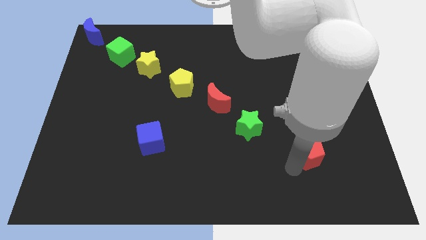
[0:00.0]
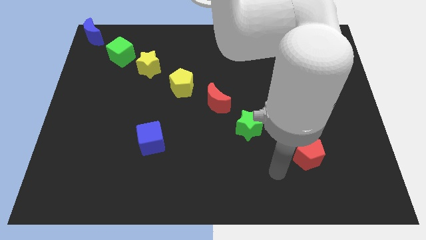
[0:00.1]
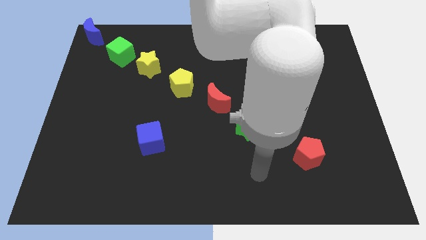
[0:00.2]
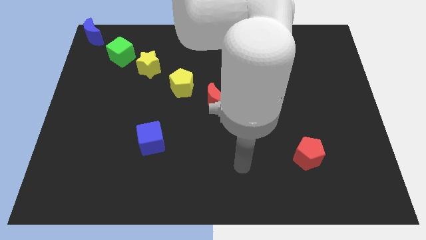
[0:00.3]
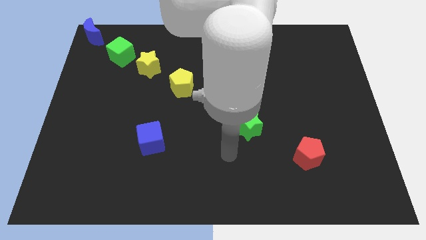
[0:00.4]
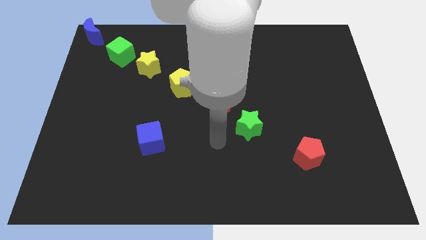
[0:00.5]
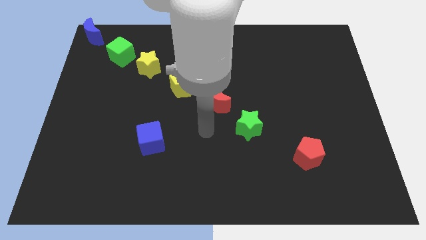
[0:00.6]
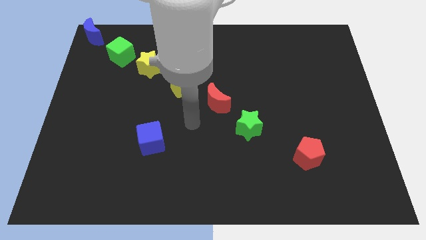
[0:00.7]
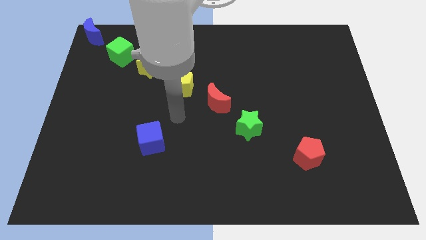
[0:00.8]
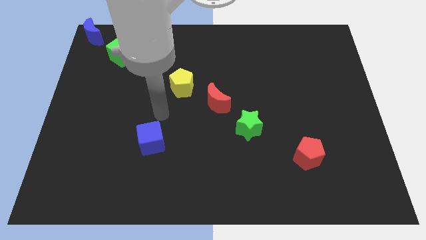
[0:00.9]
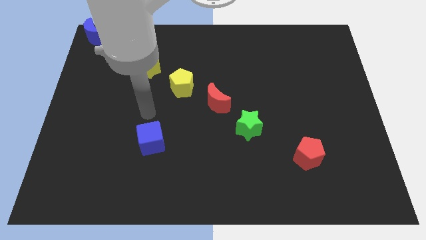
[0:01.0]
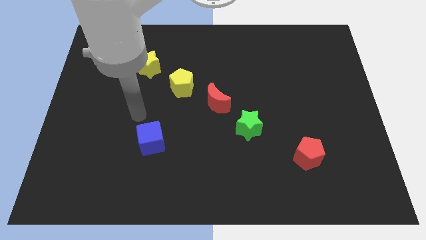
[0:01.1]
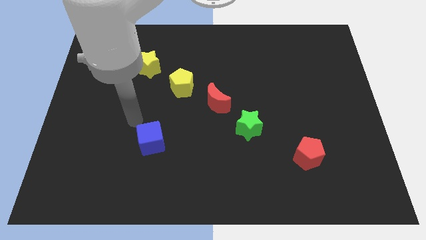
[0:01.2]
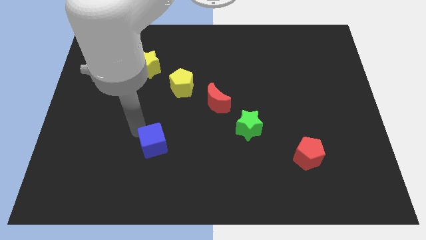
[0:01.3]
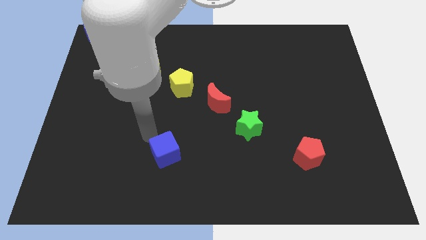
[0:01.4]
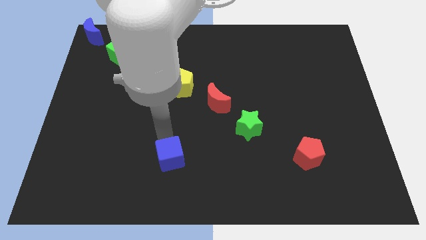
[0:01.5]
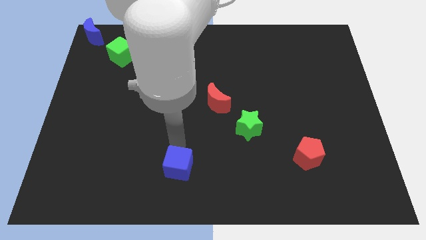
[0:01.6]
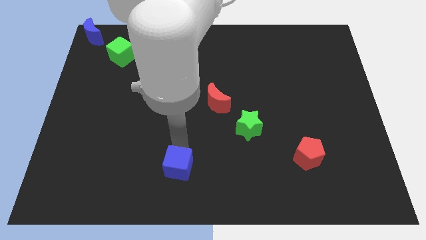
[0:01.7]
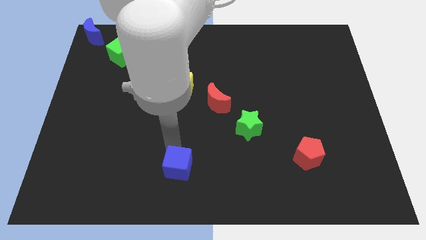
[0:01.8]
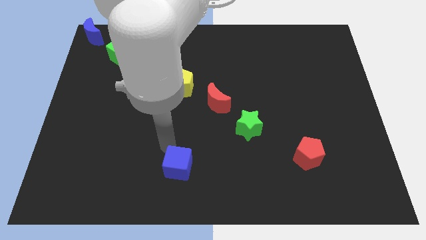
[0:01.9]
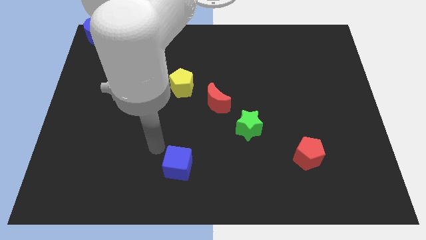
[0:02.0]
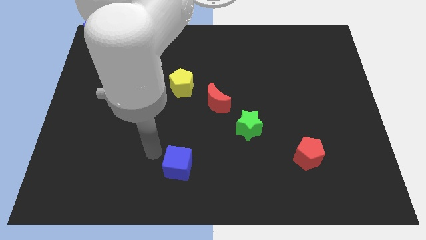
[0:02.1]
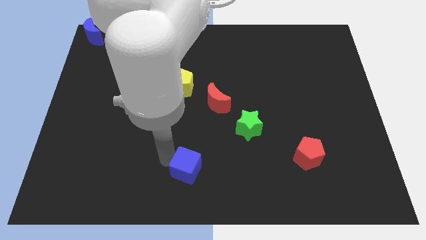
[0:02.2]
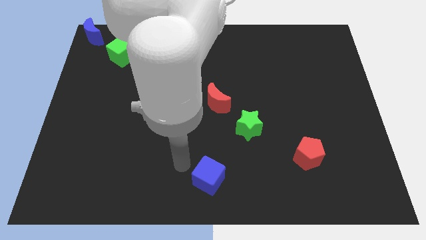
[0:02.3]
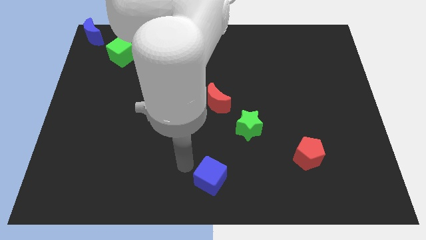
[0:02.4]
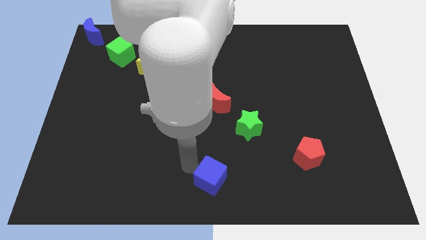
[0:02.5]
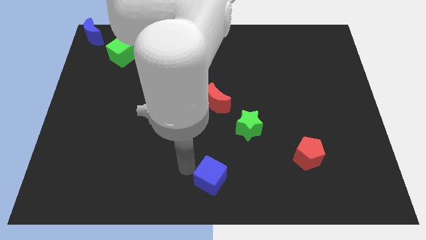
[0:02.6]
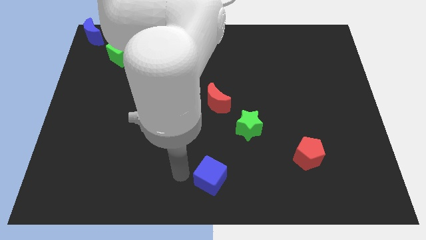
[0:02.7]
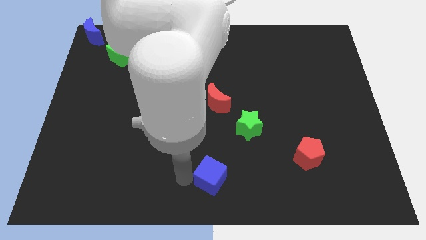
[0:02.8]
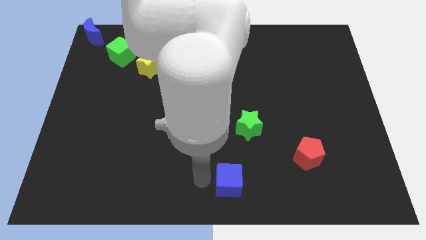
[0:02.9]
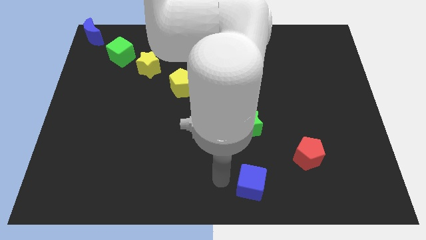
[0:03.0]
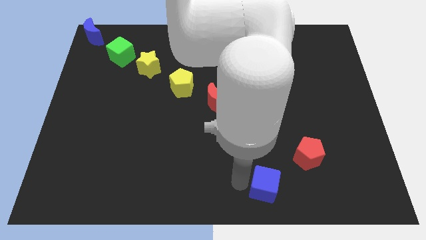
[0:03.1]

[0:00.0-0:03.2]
place the blue cube to the bottom side of the green star

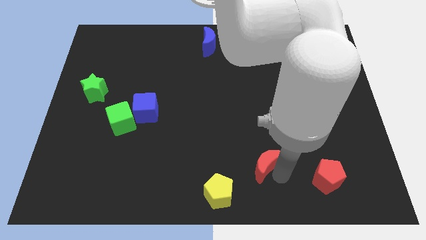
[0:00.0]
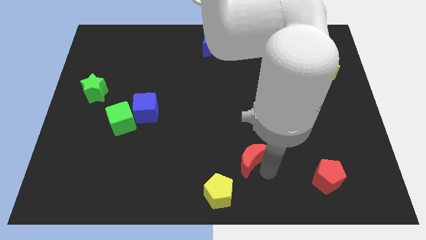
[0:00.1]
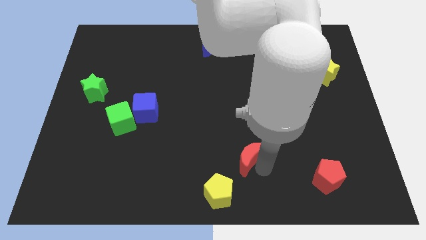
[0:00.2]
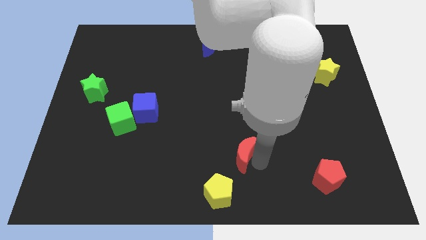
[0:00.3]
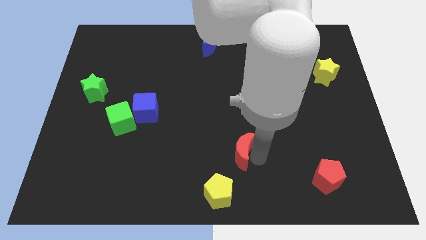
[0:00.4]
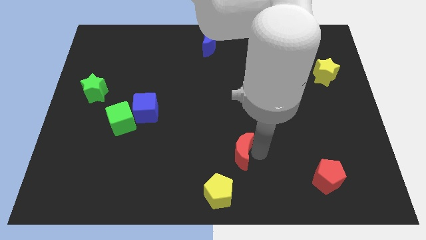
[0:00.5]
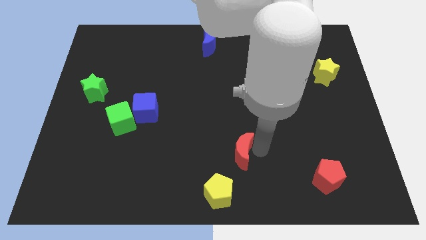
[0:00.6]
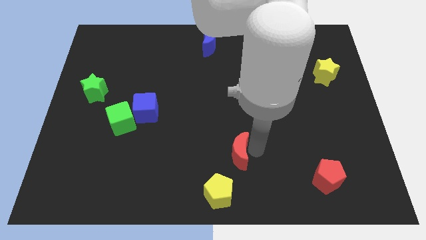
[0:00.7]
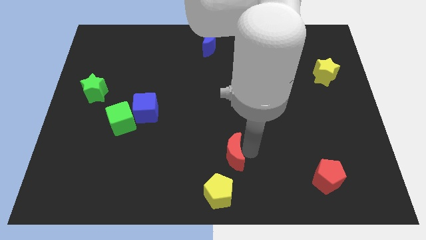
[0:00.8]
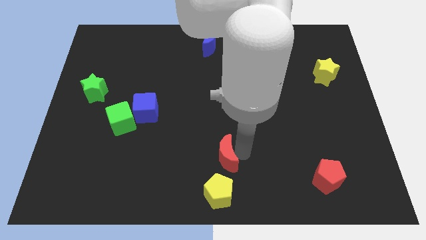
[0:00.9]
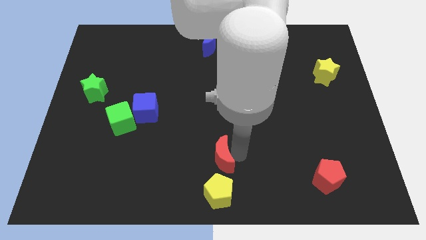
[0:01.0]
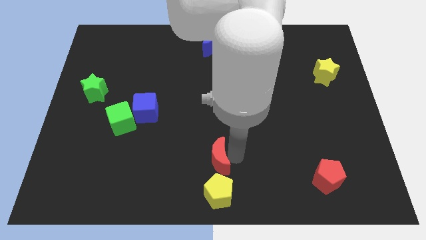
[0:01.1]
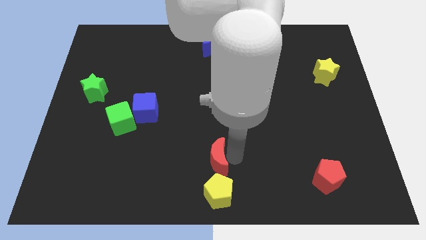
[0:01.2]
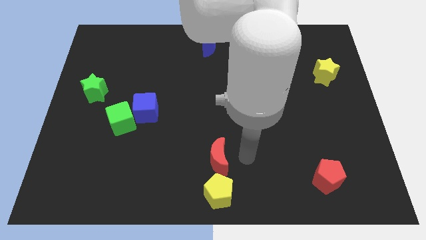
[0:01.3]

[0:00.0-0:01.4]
drag red moon to the left

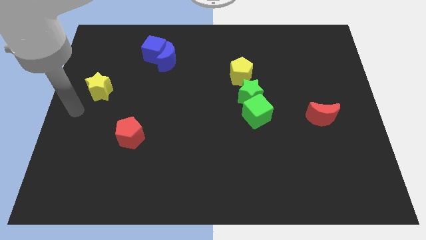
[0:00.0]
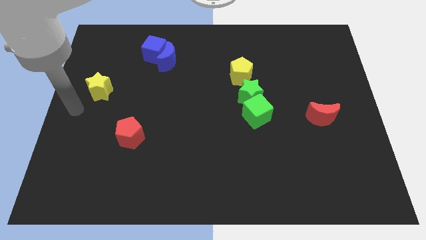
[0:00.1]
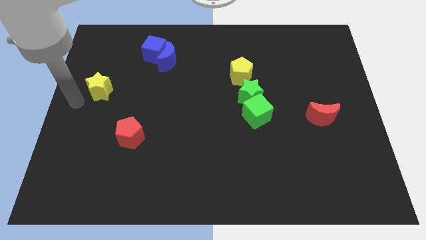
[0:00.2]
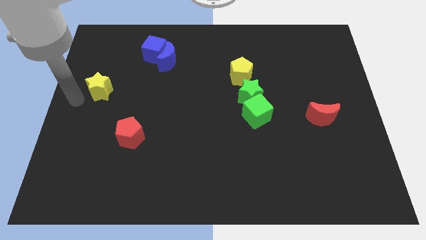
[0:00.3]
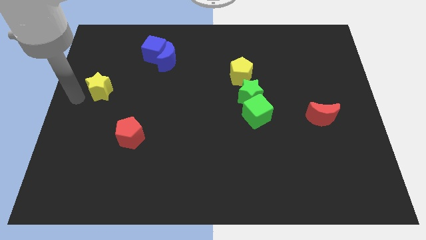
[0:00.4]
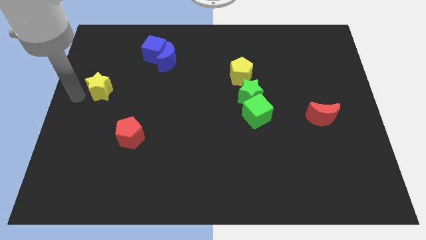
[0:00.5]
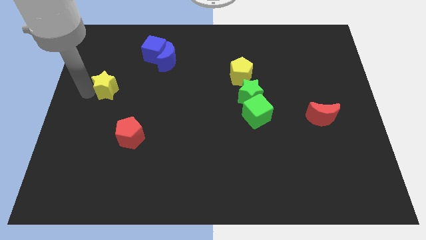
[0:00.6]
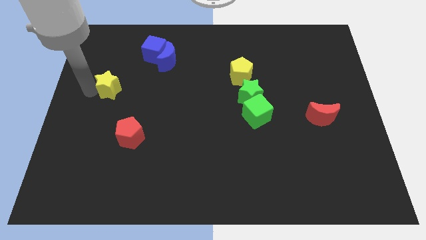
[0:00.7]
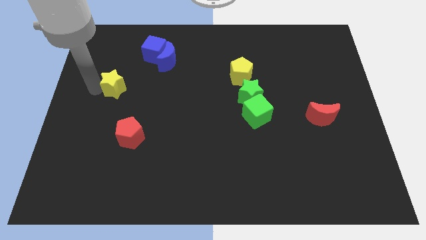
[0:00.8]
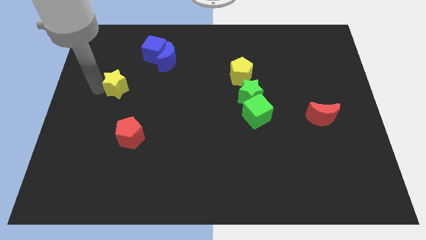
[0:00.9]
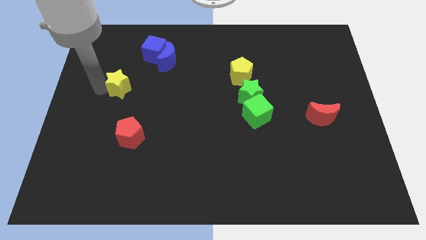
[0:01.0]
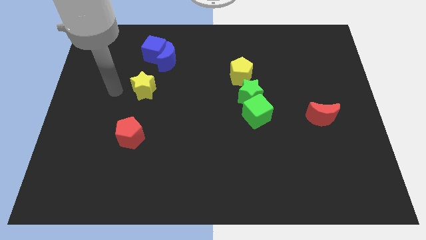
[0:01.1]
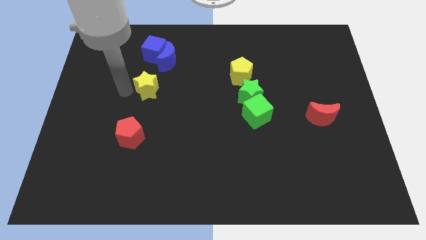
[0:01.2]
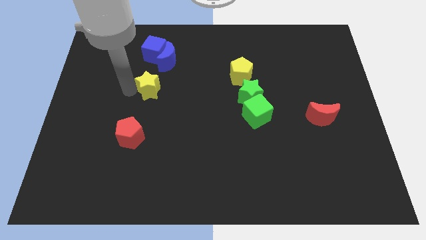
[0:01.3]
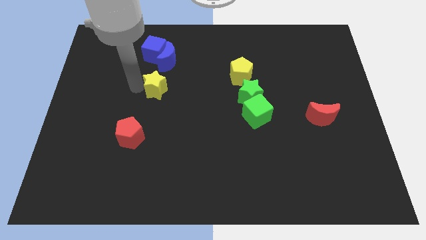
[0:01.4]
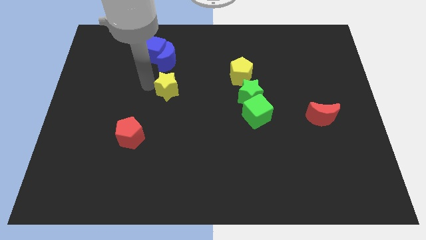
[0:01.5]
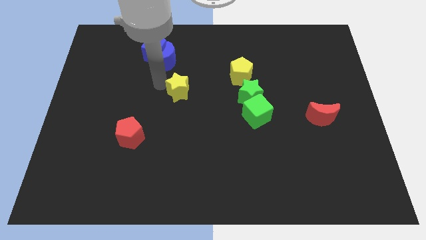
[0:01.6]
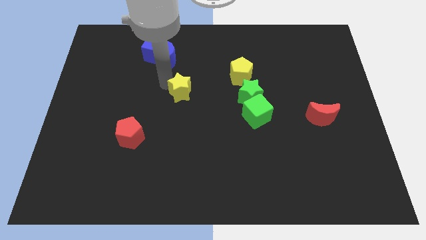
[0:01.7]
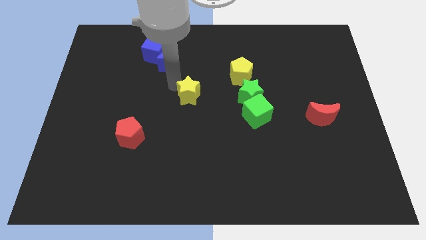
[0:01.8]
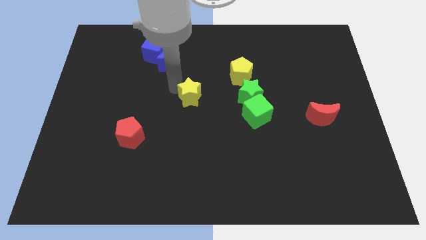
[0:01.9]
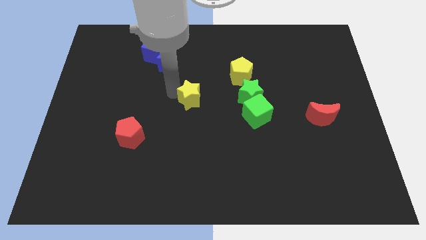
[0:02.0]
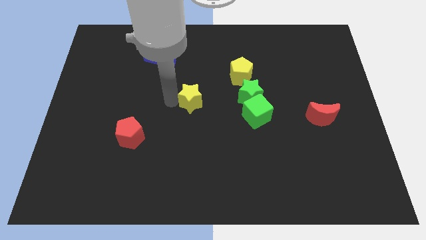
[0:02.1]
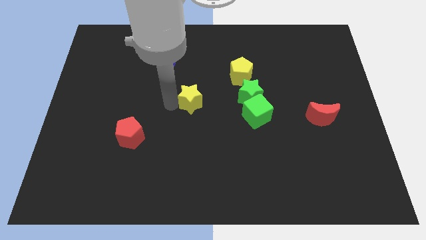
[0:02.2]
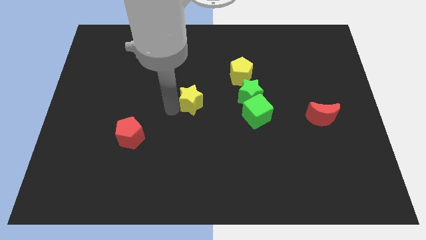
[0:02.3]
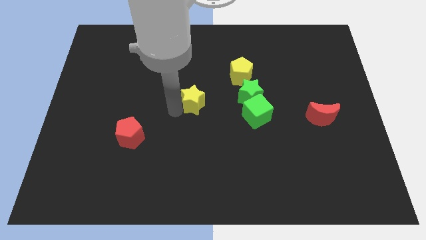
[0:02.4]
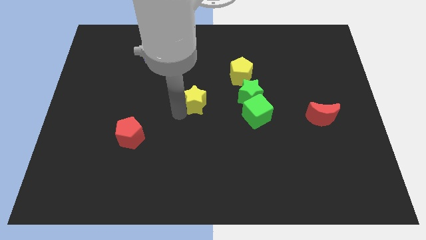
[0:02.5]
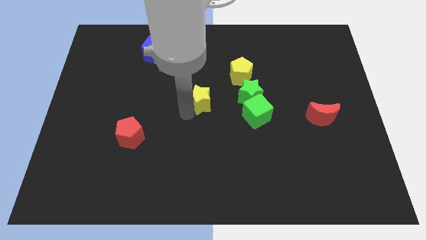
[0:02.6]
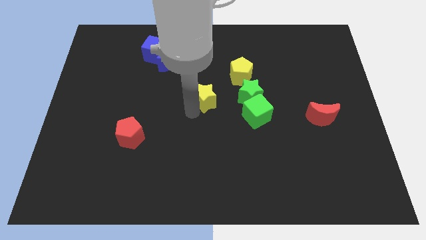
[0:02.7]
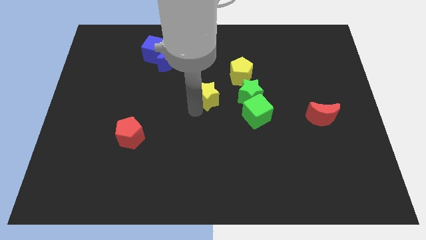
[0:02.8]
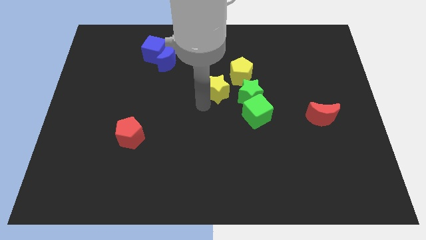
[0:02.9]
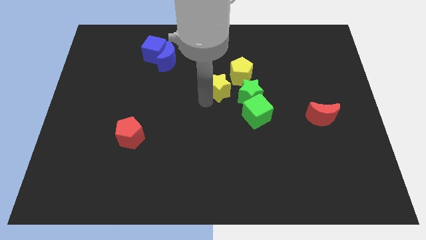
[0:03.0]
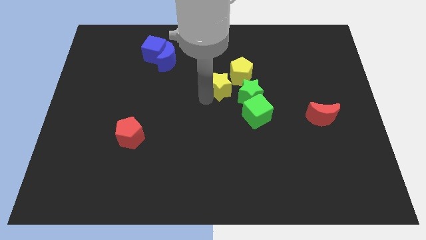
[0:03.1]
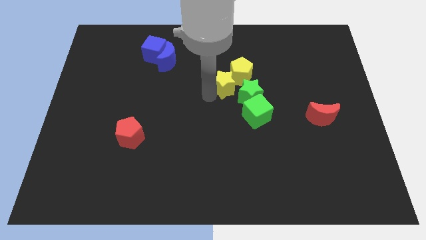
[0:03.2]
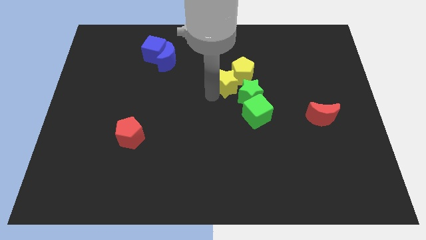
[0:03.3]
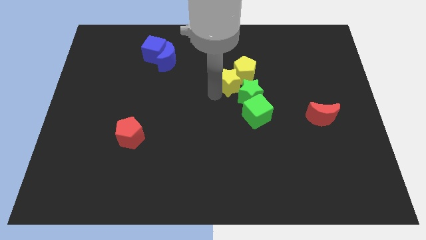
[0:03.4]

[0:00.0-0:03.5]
move the yellow star to the bottom left side of the yellow pentagon

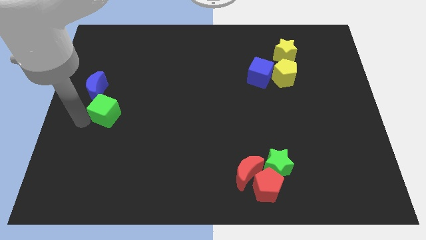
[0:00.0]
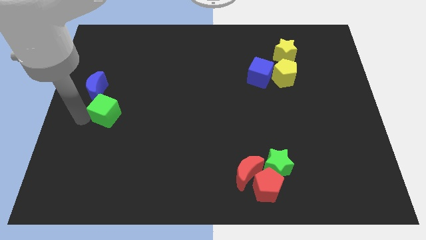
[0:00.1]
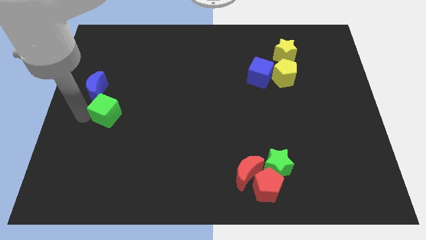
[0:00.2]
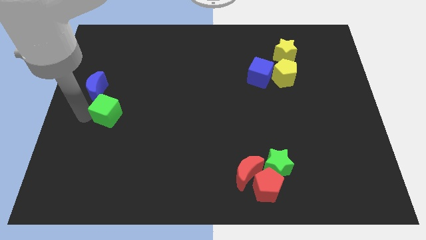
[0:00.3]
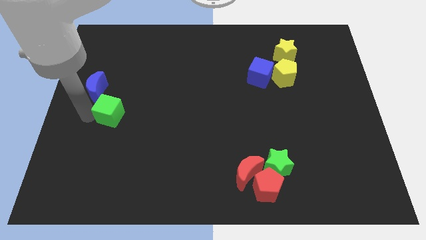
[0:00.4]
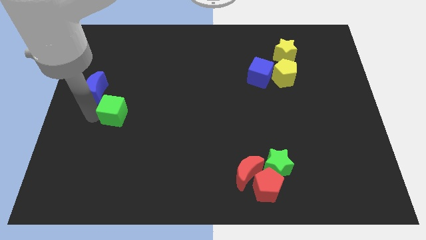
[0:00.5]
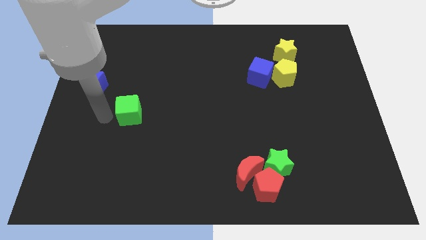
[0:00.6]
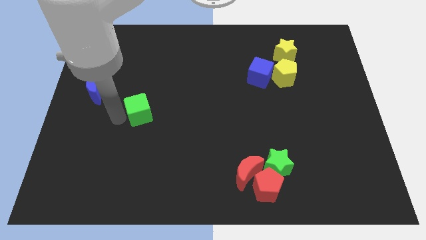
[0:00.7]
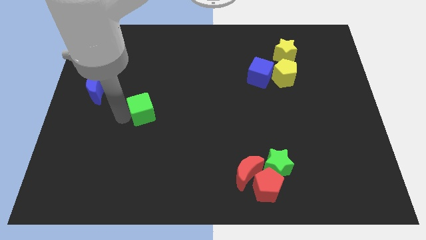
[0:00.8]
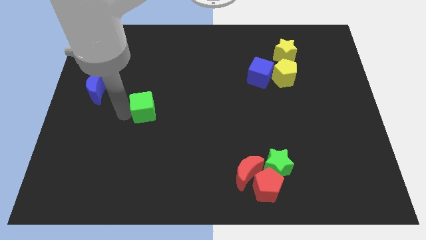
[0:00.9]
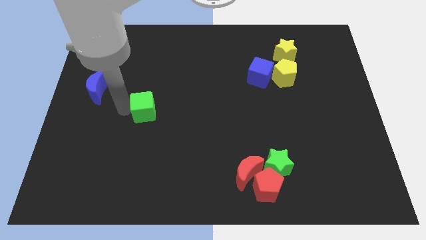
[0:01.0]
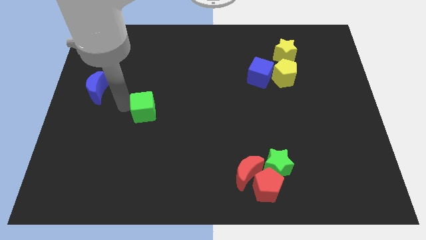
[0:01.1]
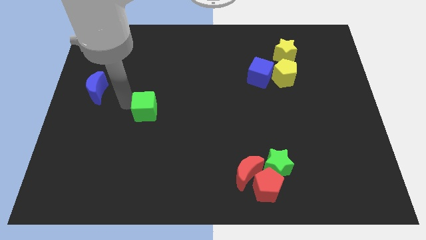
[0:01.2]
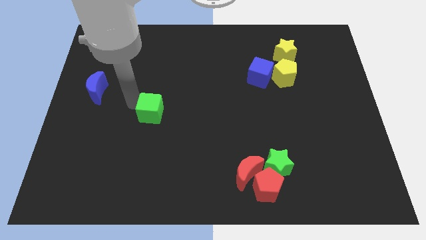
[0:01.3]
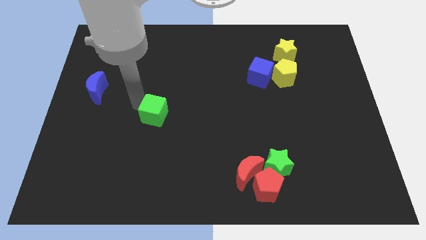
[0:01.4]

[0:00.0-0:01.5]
push the green cube towards the center of the board
